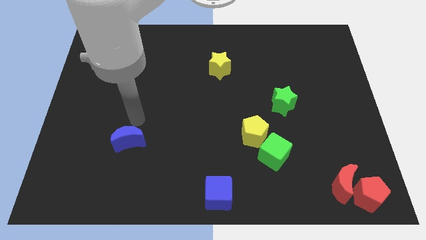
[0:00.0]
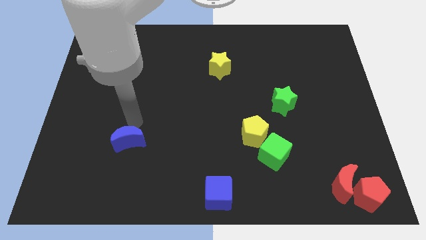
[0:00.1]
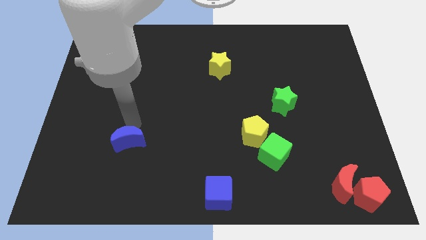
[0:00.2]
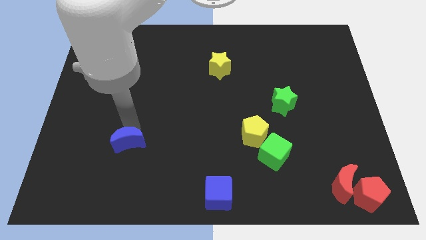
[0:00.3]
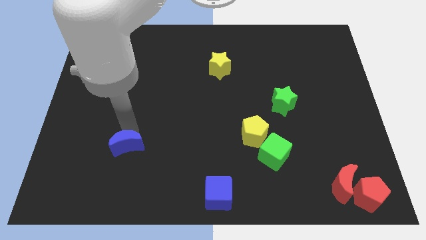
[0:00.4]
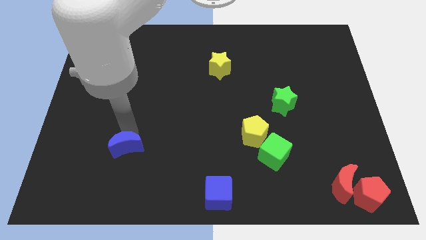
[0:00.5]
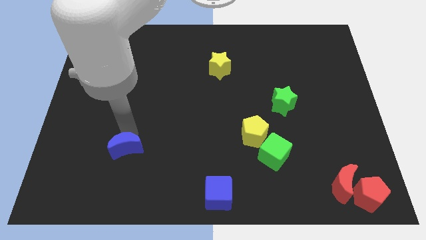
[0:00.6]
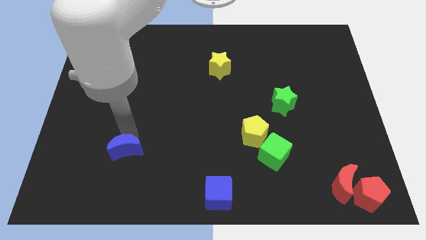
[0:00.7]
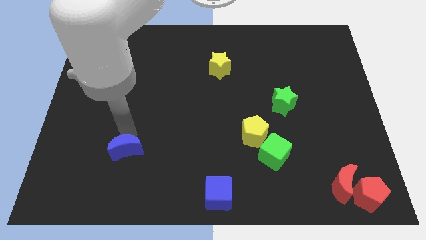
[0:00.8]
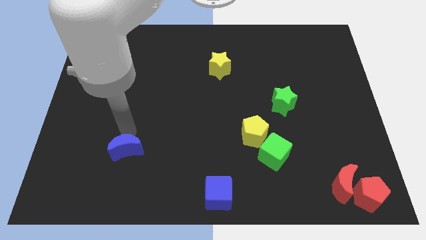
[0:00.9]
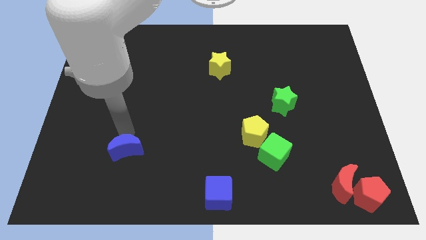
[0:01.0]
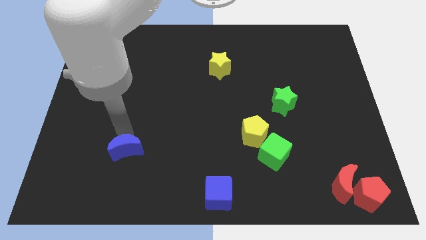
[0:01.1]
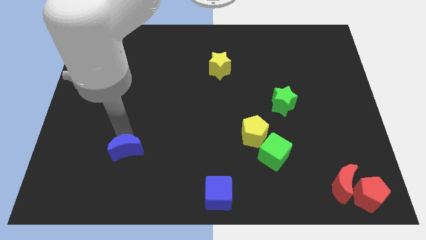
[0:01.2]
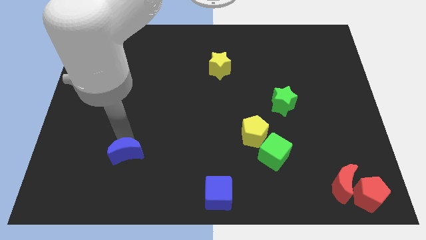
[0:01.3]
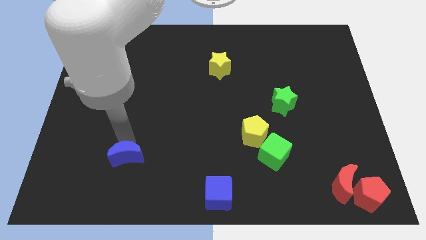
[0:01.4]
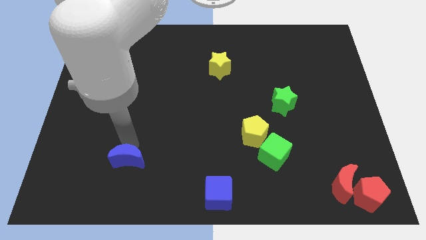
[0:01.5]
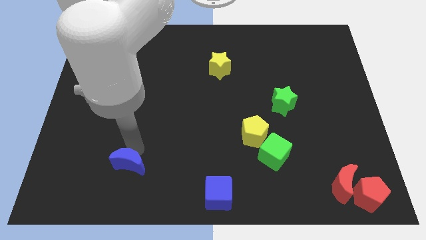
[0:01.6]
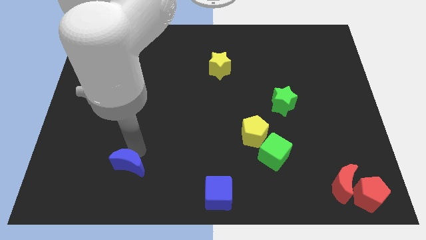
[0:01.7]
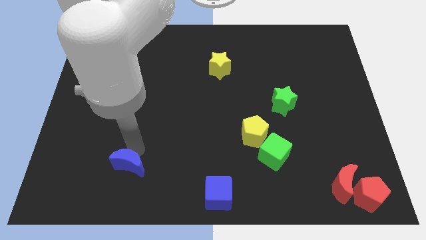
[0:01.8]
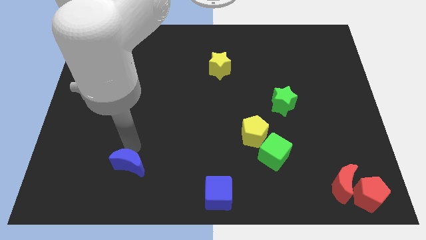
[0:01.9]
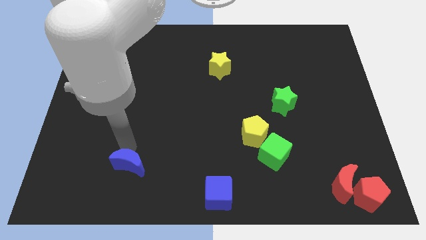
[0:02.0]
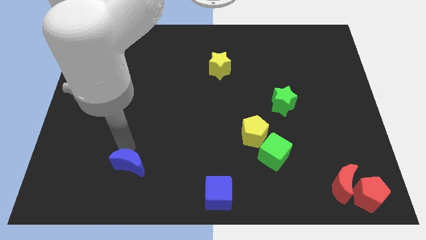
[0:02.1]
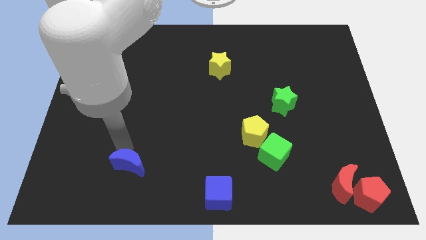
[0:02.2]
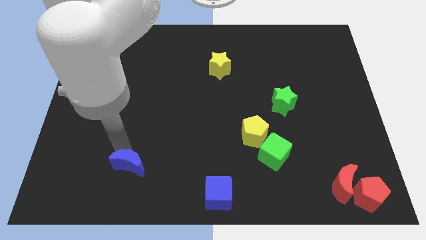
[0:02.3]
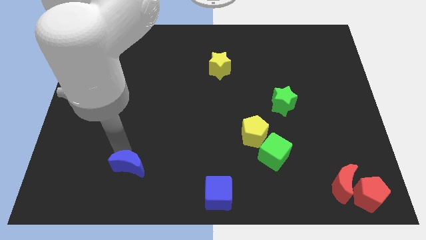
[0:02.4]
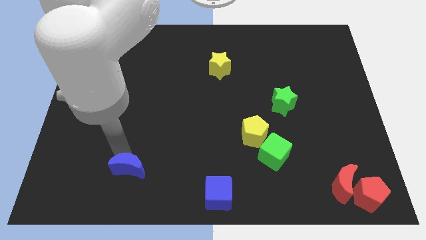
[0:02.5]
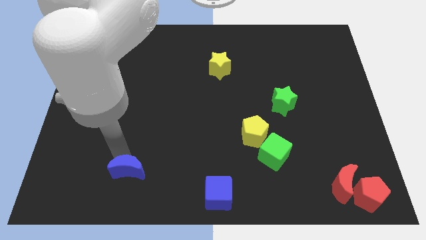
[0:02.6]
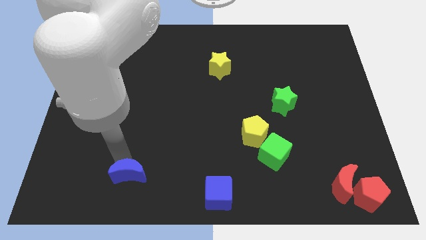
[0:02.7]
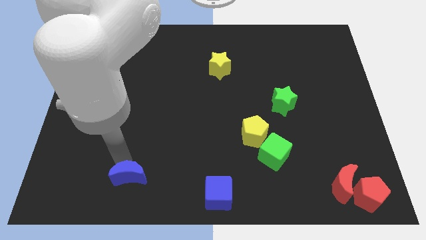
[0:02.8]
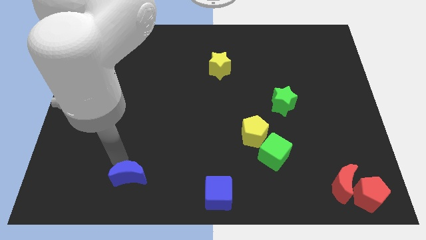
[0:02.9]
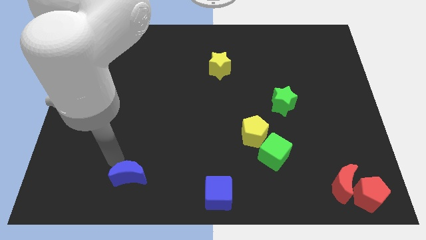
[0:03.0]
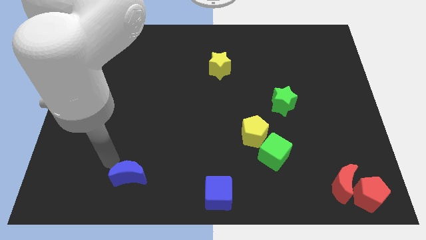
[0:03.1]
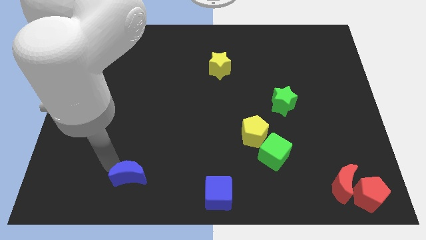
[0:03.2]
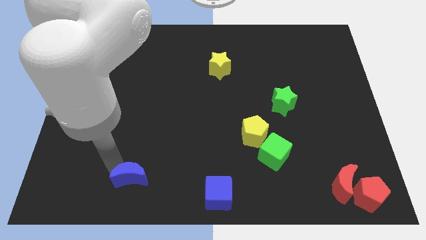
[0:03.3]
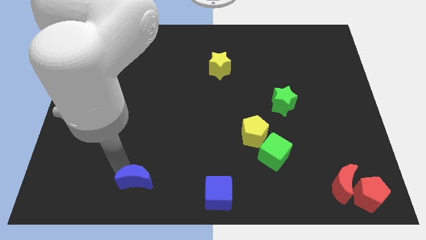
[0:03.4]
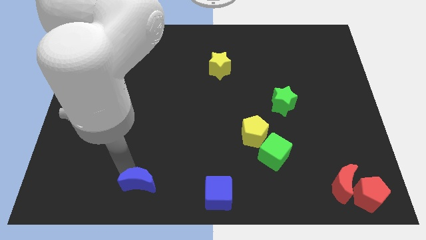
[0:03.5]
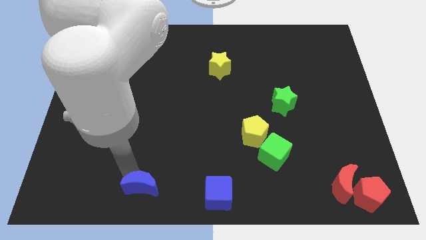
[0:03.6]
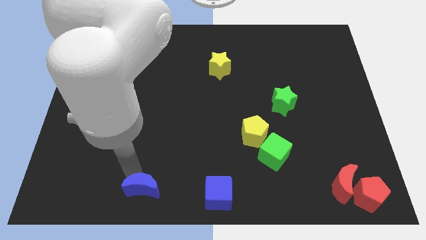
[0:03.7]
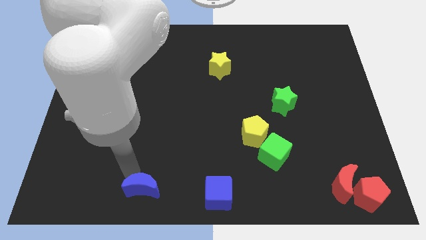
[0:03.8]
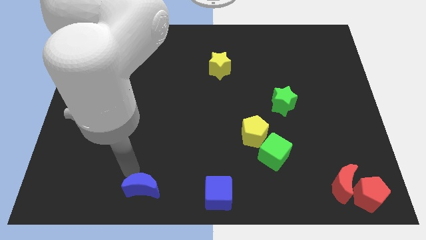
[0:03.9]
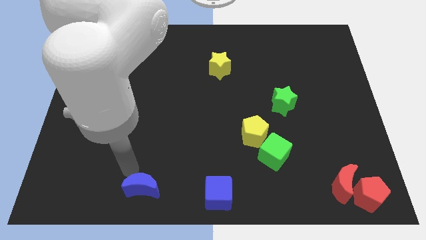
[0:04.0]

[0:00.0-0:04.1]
move blue moon to the bottom left

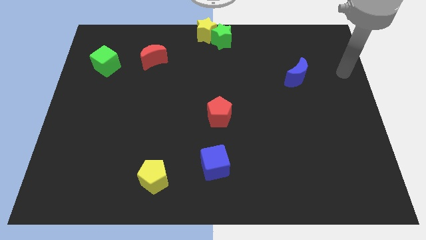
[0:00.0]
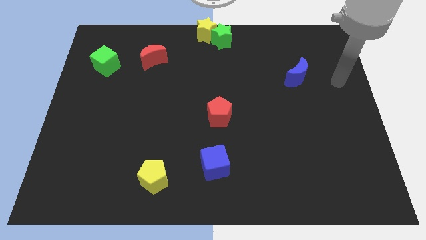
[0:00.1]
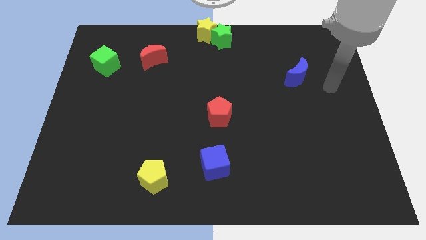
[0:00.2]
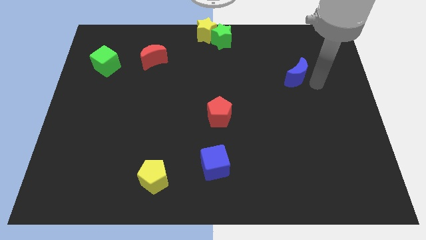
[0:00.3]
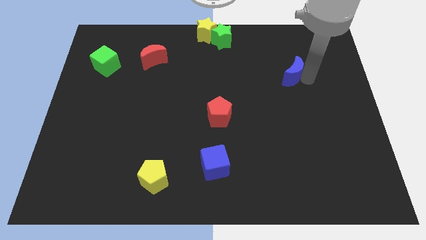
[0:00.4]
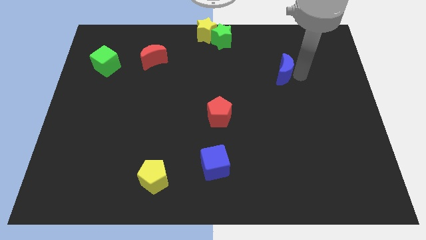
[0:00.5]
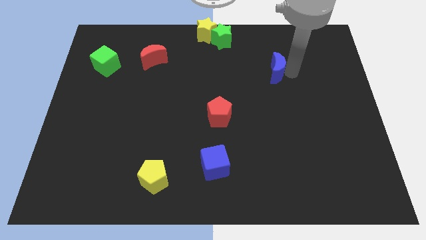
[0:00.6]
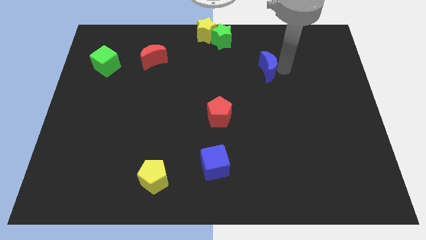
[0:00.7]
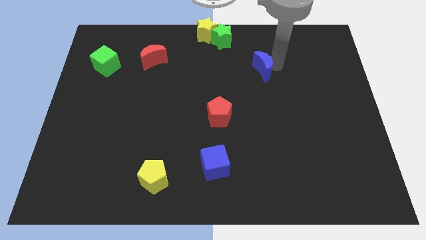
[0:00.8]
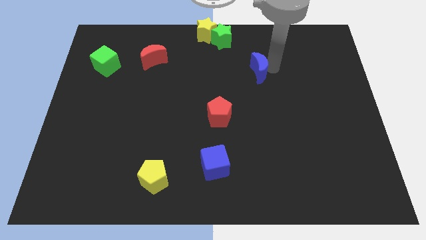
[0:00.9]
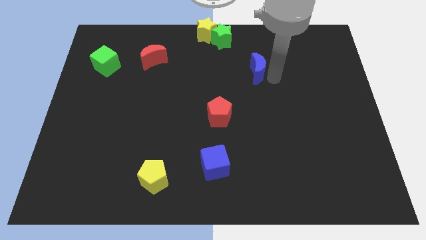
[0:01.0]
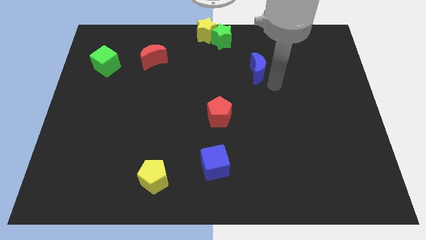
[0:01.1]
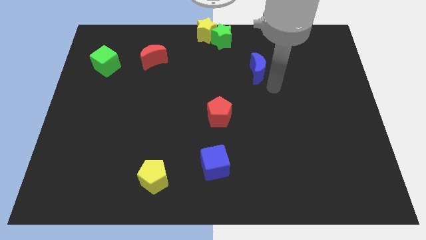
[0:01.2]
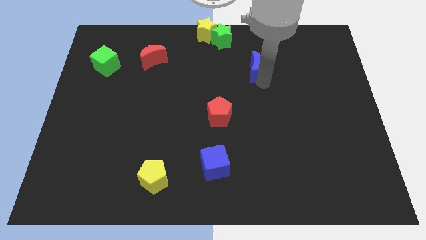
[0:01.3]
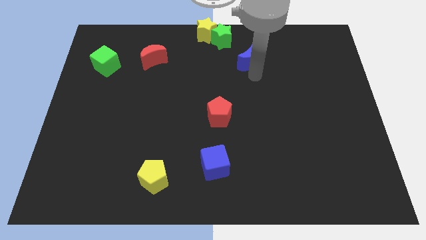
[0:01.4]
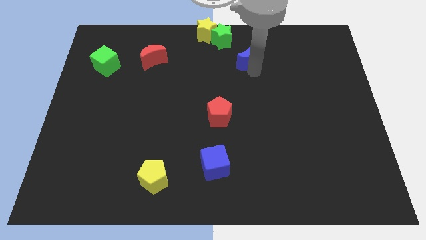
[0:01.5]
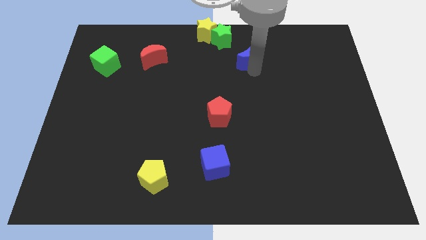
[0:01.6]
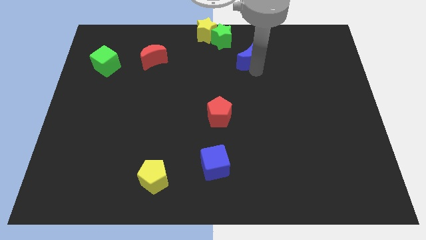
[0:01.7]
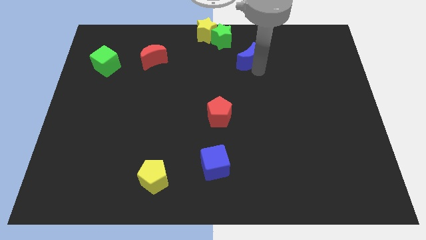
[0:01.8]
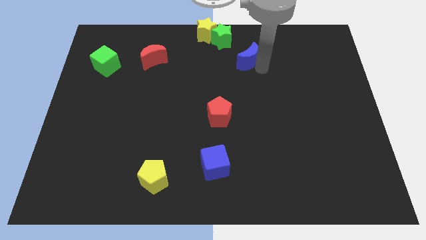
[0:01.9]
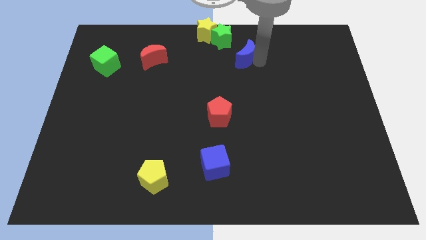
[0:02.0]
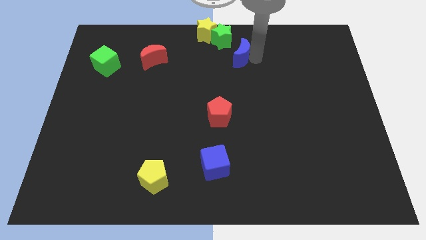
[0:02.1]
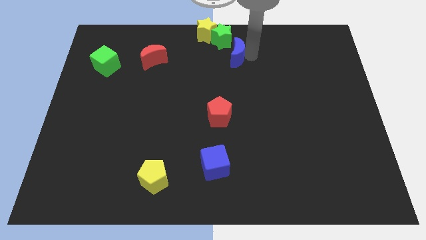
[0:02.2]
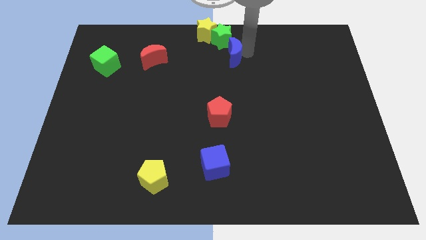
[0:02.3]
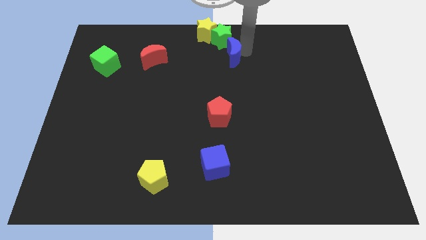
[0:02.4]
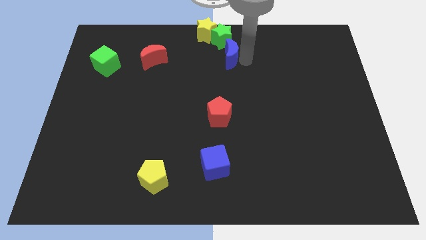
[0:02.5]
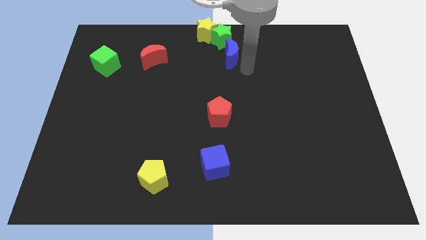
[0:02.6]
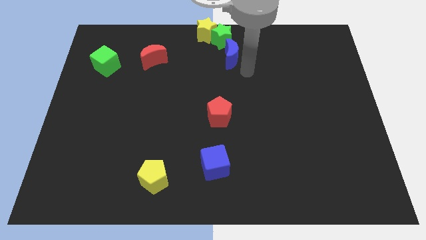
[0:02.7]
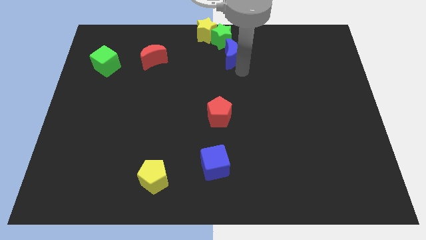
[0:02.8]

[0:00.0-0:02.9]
place blue moon to the bottom of the green star

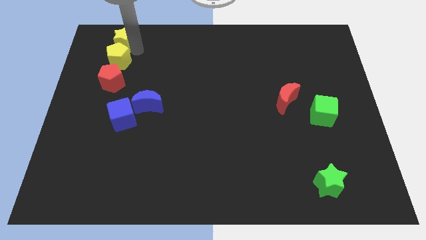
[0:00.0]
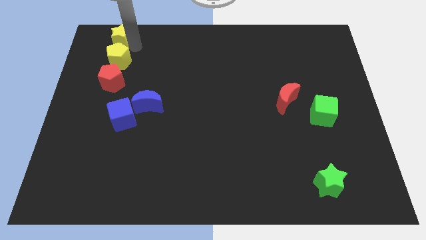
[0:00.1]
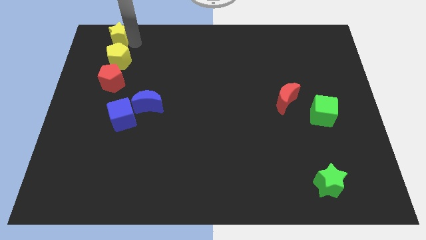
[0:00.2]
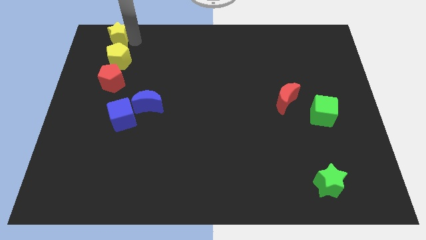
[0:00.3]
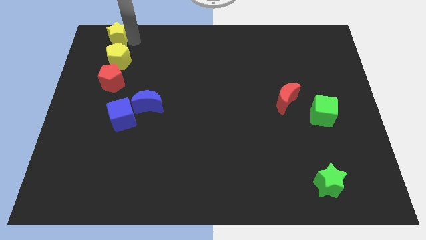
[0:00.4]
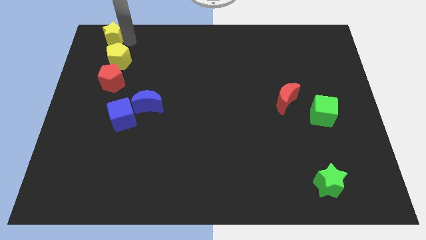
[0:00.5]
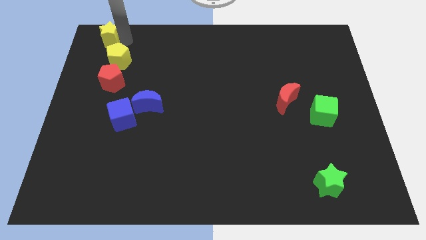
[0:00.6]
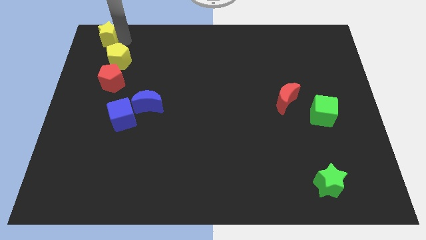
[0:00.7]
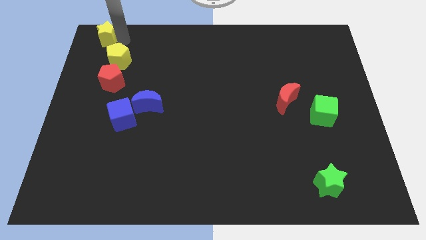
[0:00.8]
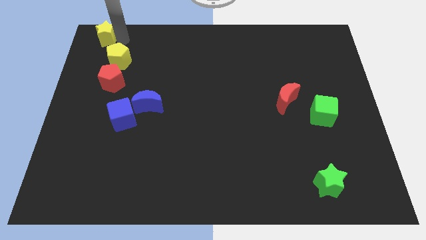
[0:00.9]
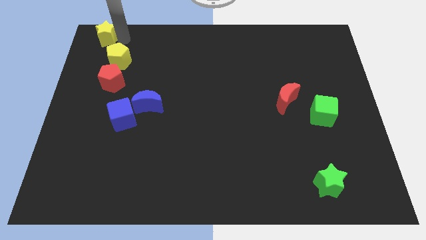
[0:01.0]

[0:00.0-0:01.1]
slide yellow star to the top left

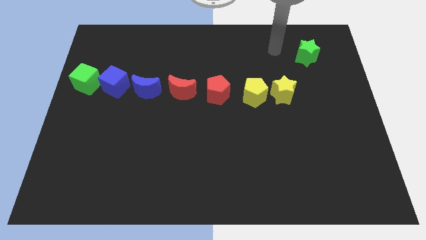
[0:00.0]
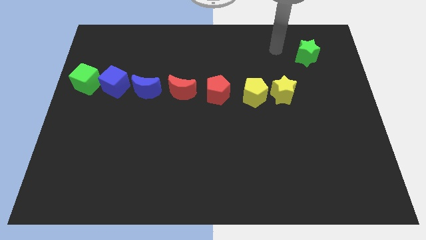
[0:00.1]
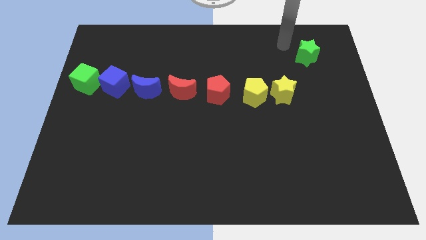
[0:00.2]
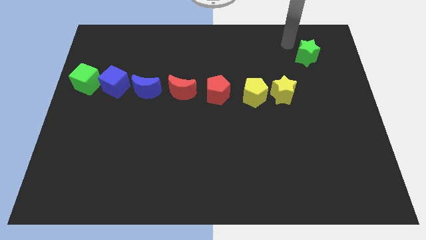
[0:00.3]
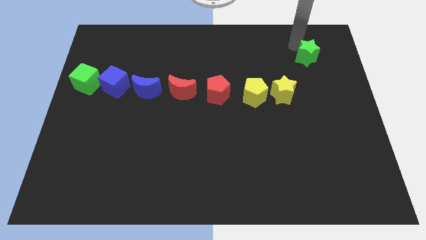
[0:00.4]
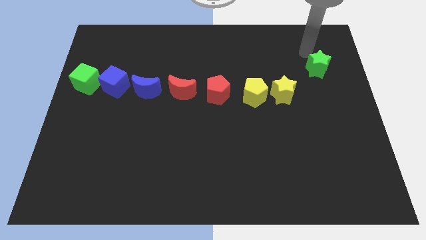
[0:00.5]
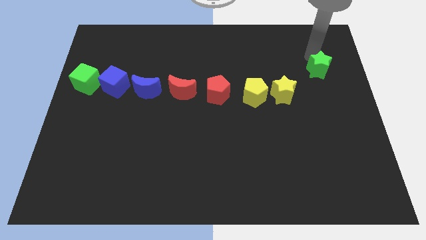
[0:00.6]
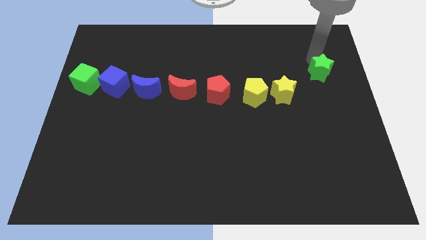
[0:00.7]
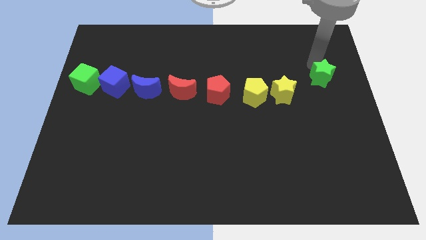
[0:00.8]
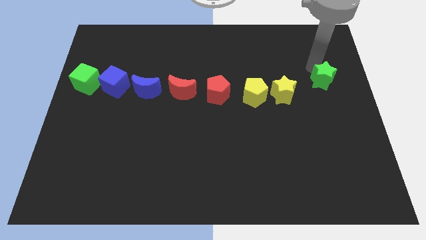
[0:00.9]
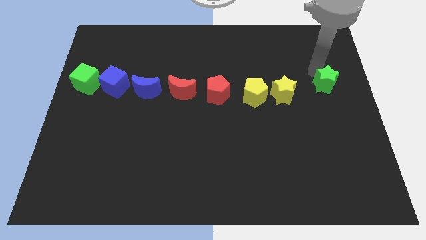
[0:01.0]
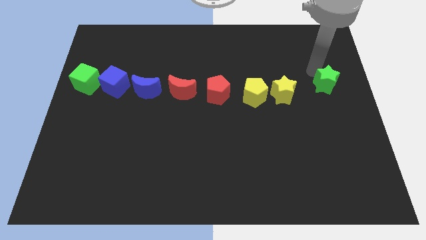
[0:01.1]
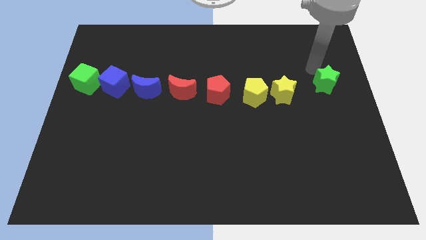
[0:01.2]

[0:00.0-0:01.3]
move the green star to the bottom of the board
